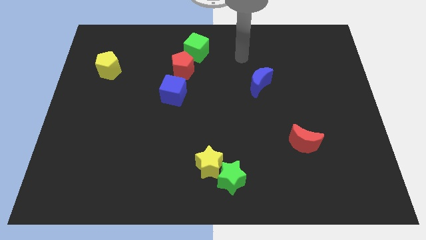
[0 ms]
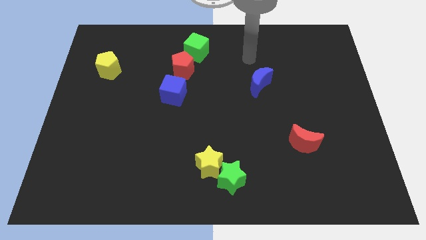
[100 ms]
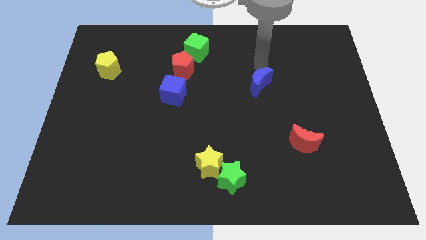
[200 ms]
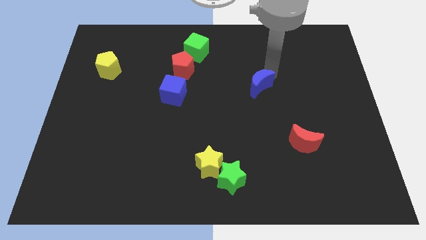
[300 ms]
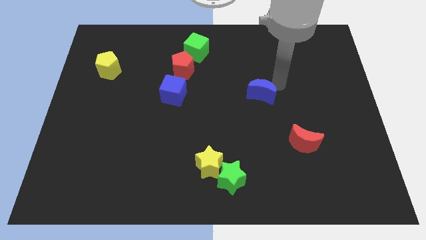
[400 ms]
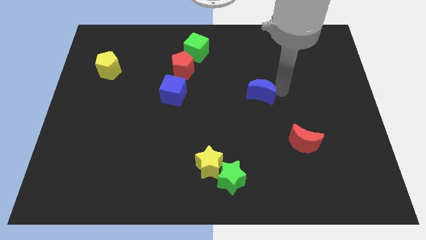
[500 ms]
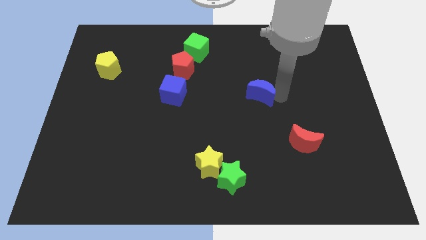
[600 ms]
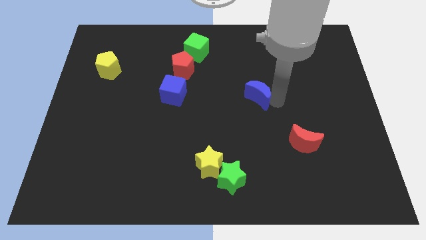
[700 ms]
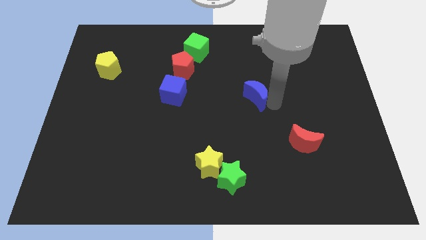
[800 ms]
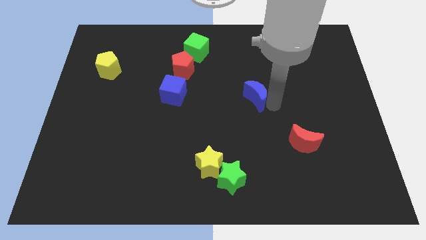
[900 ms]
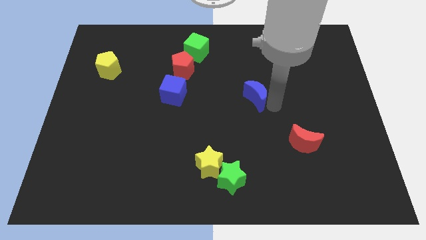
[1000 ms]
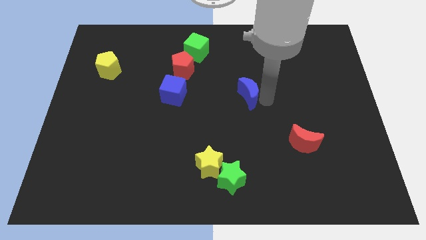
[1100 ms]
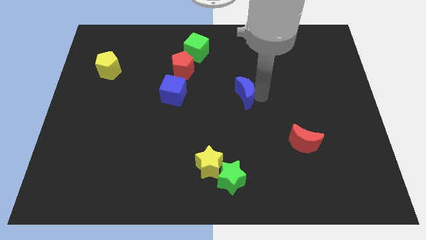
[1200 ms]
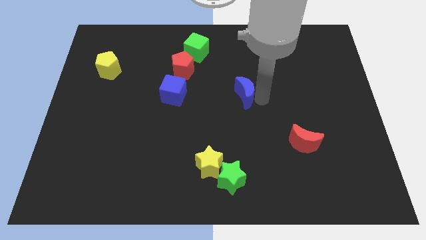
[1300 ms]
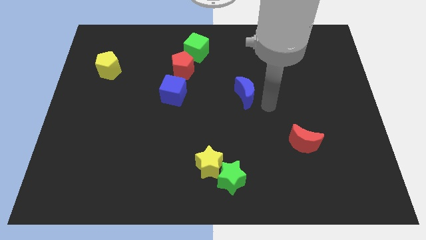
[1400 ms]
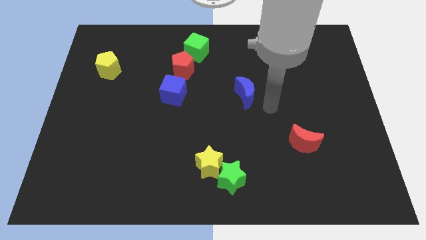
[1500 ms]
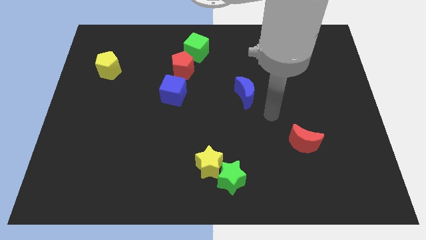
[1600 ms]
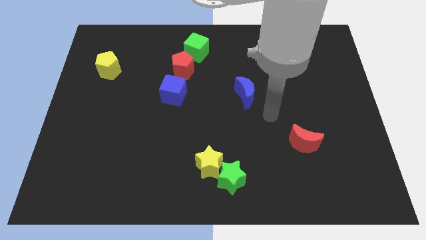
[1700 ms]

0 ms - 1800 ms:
place your arm in between the blue crescent and red crescent

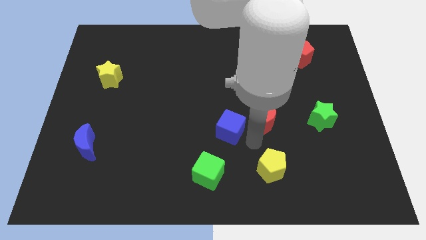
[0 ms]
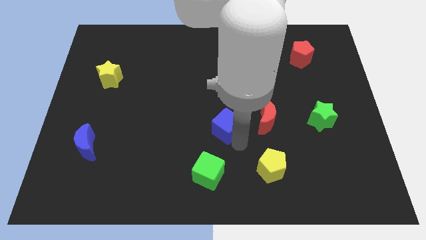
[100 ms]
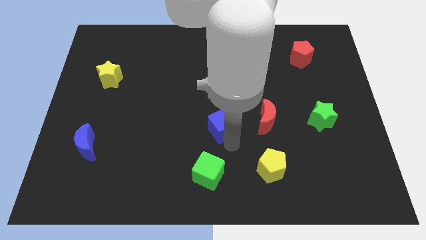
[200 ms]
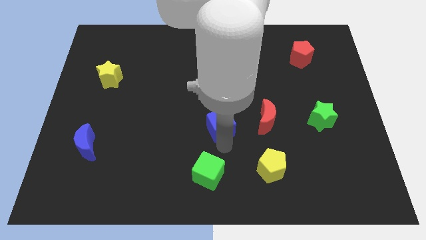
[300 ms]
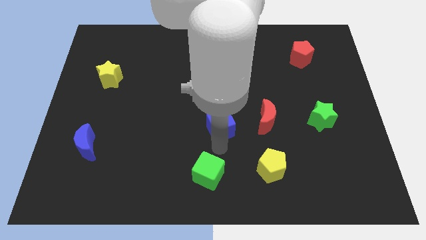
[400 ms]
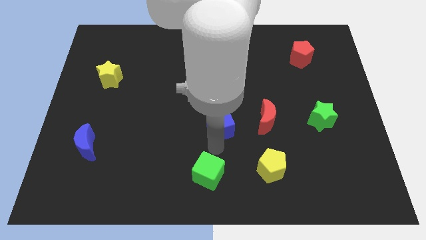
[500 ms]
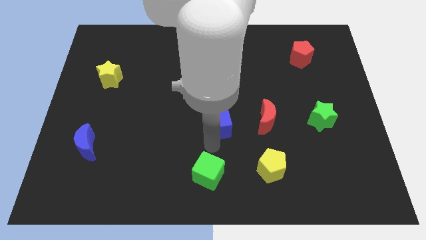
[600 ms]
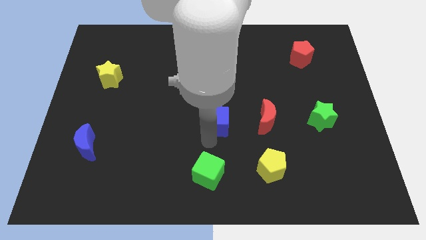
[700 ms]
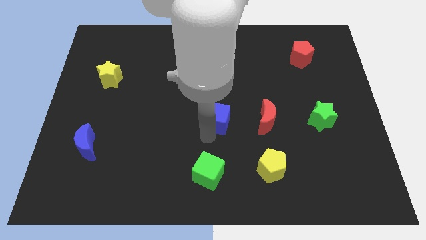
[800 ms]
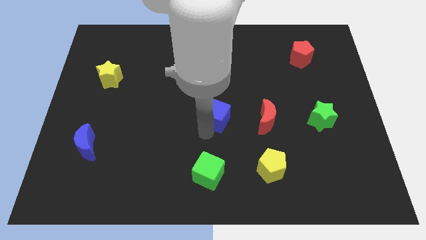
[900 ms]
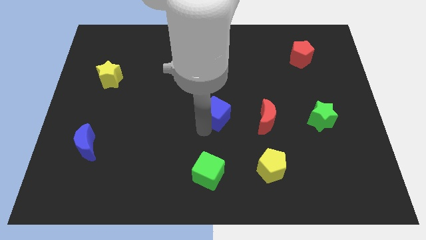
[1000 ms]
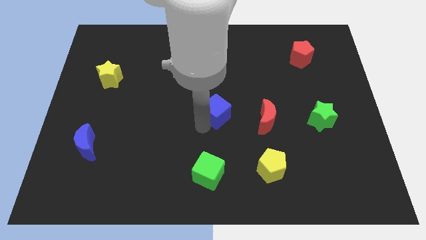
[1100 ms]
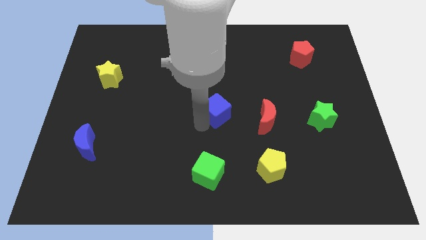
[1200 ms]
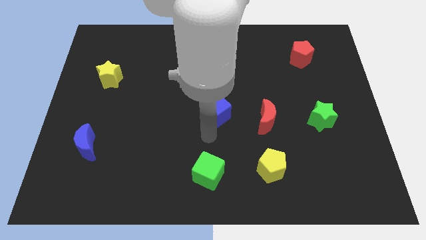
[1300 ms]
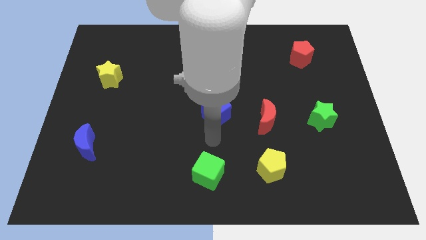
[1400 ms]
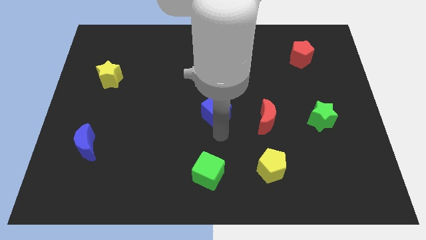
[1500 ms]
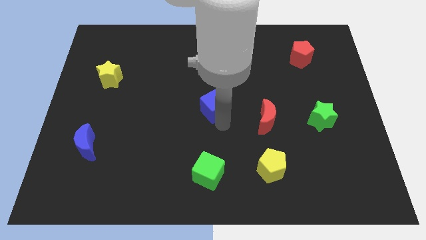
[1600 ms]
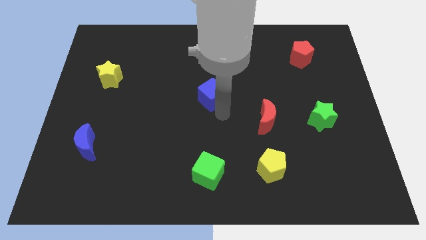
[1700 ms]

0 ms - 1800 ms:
put the blue cube vertically above the green cube

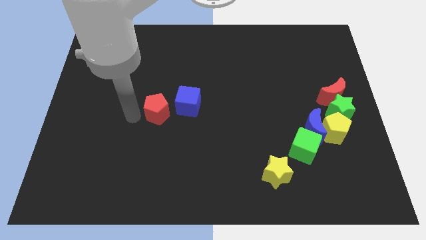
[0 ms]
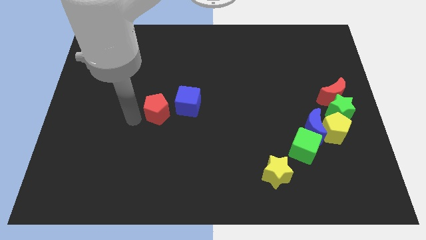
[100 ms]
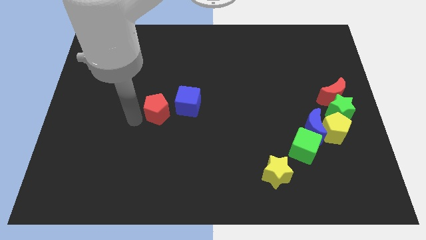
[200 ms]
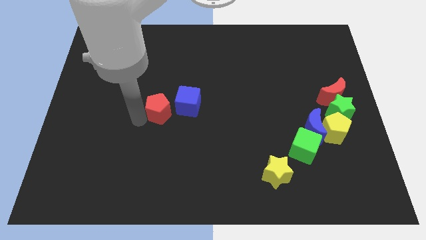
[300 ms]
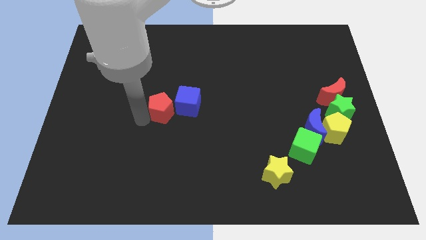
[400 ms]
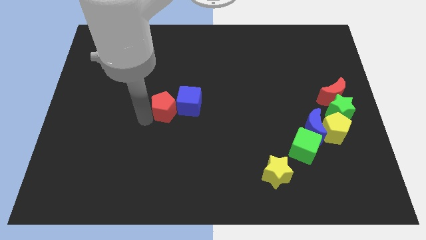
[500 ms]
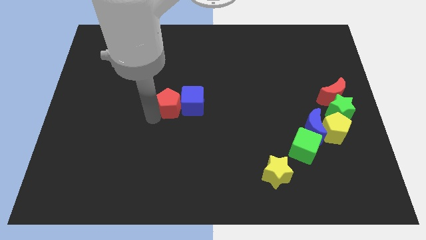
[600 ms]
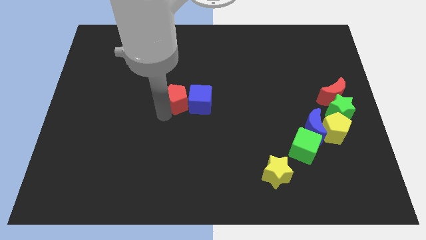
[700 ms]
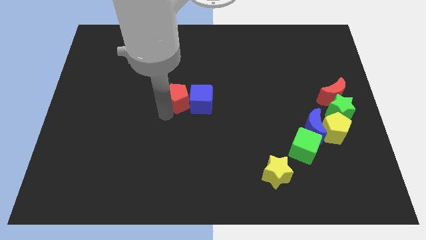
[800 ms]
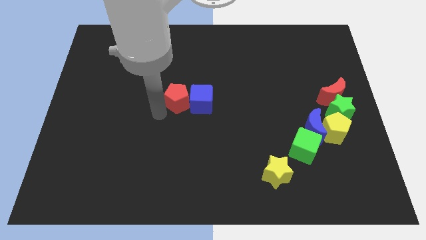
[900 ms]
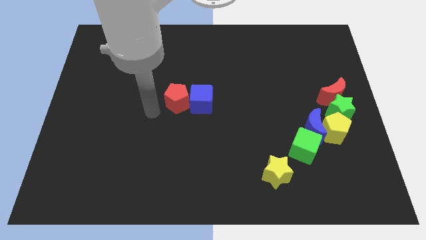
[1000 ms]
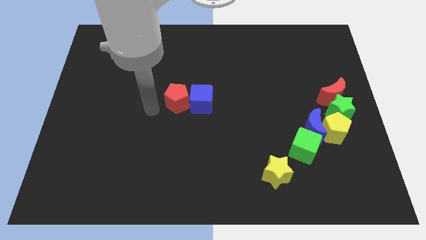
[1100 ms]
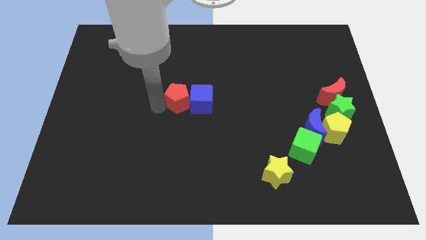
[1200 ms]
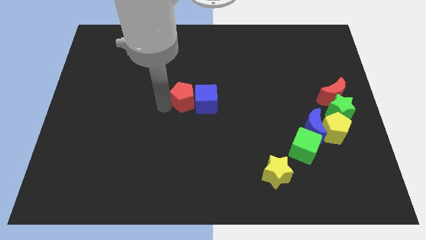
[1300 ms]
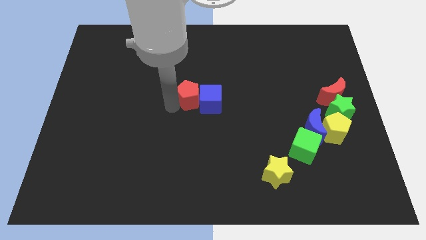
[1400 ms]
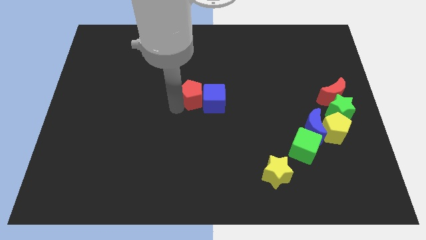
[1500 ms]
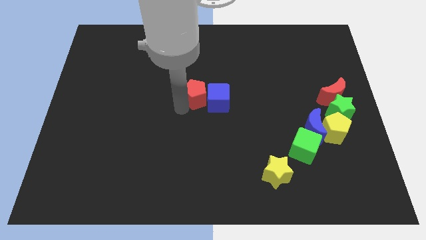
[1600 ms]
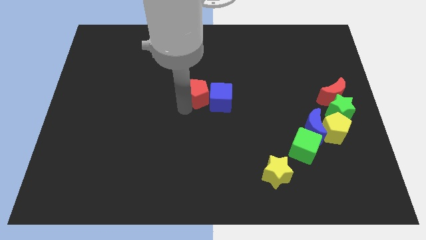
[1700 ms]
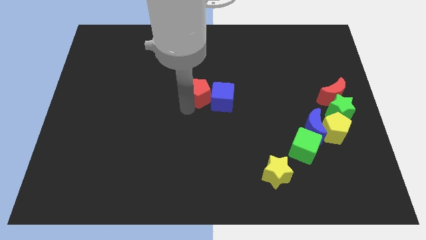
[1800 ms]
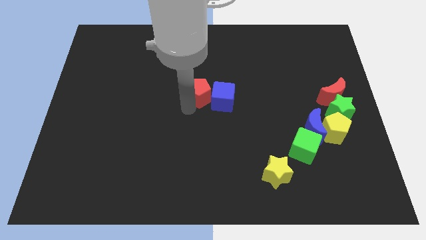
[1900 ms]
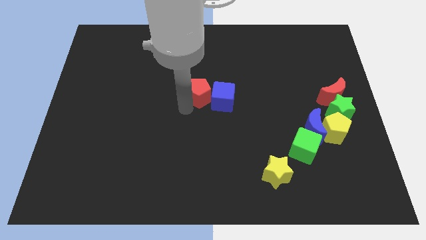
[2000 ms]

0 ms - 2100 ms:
slide red pentagon along with blue cube to the center

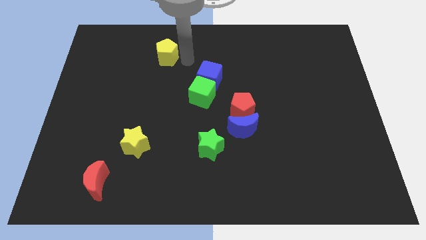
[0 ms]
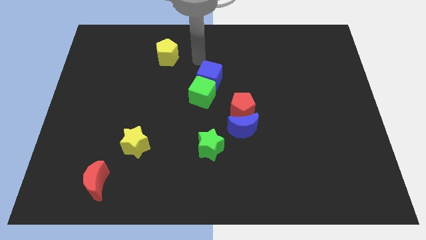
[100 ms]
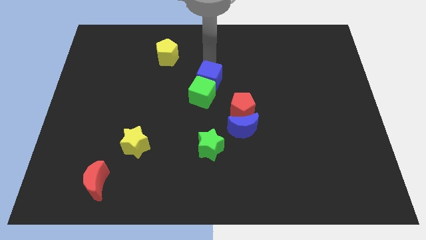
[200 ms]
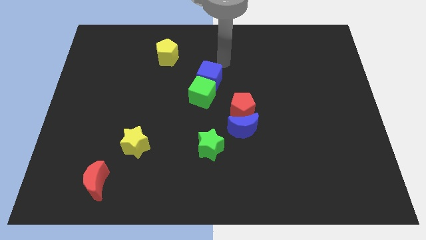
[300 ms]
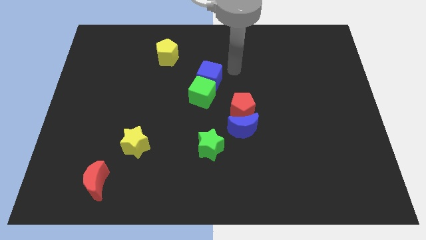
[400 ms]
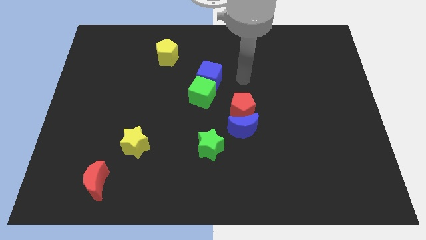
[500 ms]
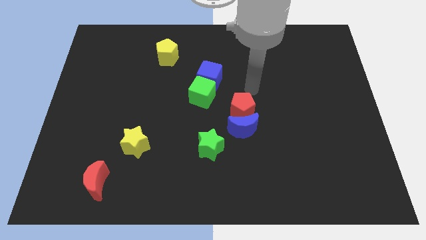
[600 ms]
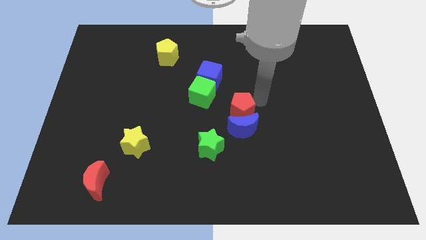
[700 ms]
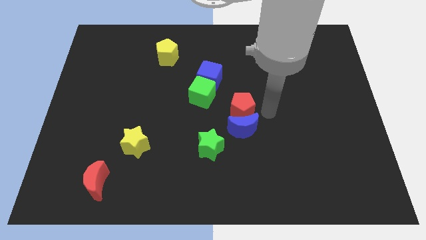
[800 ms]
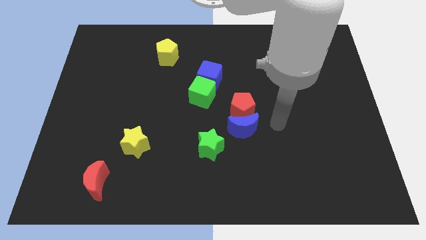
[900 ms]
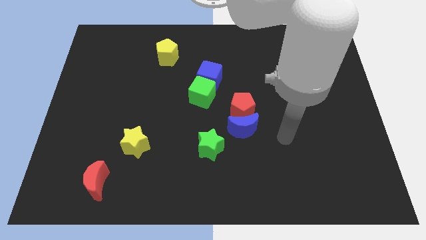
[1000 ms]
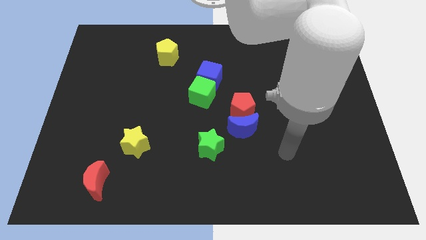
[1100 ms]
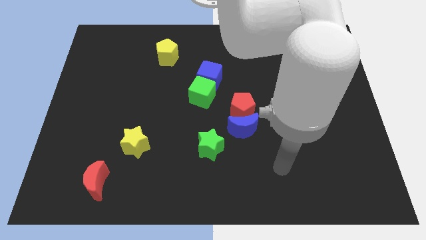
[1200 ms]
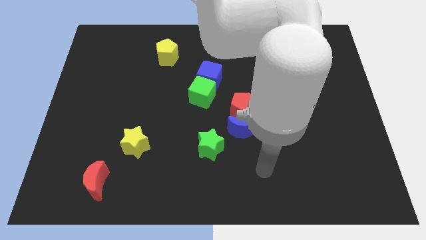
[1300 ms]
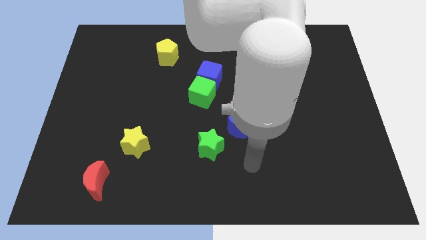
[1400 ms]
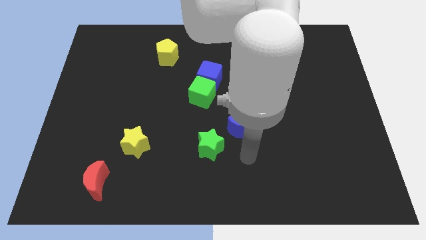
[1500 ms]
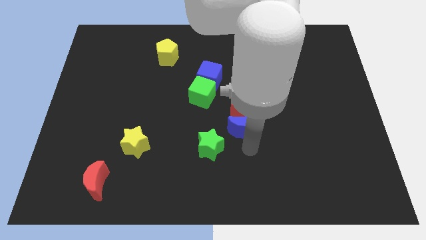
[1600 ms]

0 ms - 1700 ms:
move your arm away from the yellow pentagon

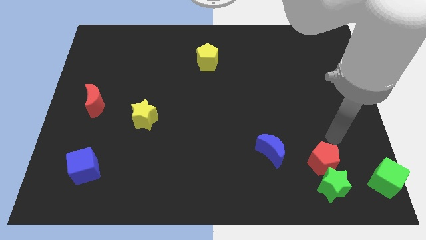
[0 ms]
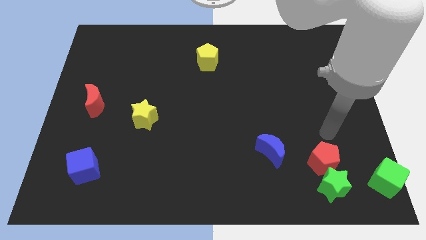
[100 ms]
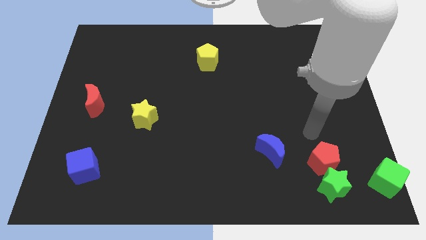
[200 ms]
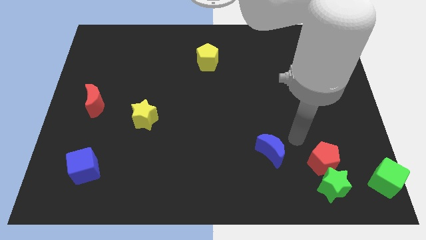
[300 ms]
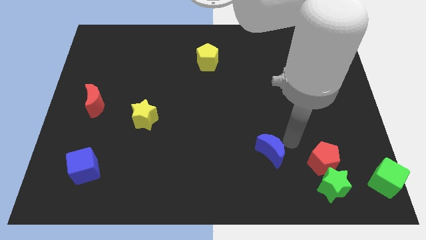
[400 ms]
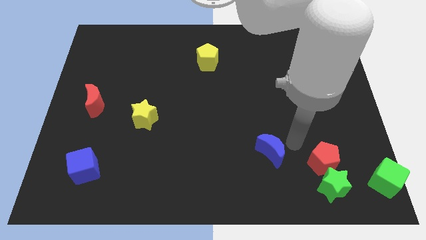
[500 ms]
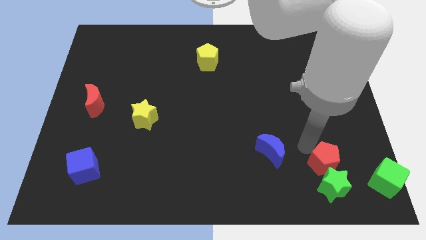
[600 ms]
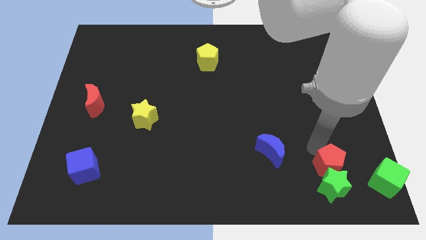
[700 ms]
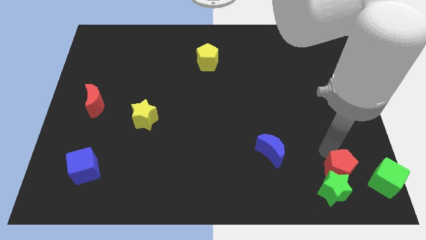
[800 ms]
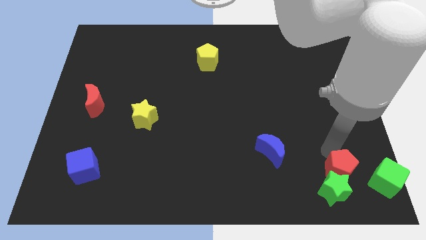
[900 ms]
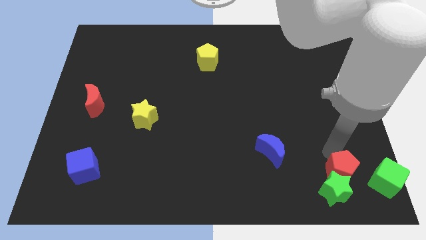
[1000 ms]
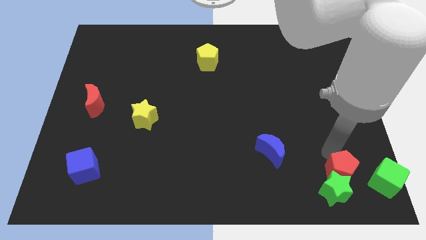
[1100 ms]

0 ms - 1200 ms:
move the red pentagon slightly to the right

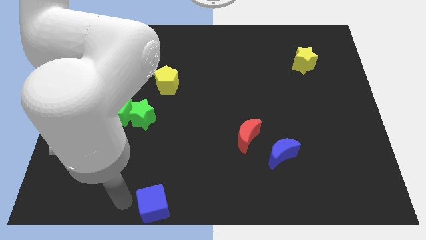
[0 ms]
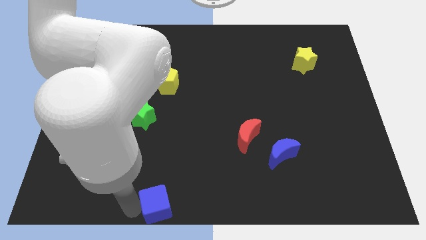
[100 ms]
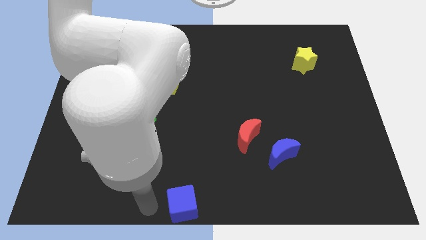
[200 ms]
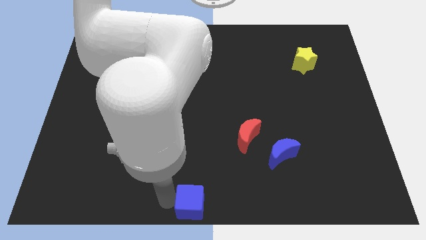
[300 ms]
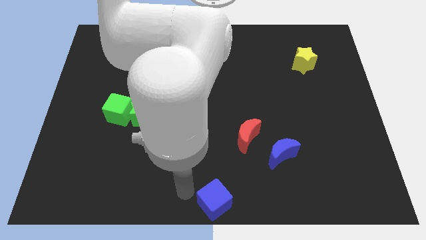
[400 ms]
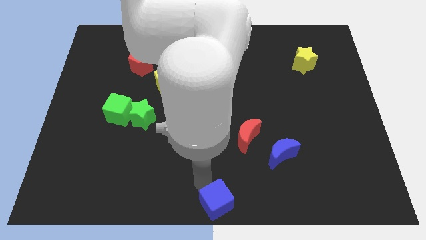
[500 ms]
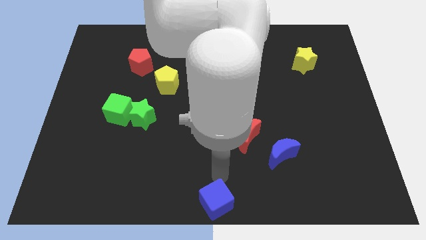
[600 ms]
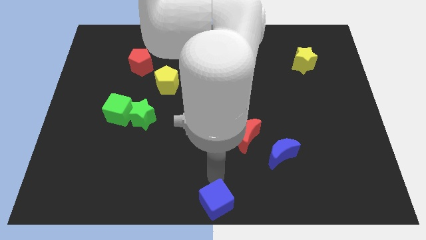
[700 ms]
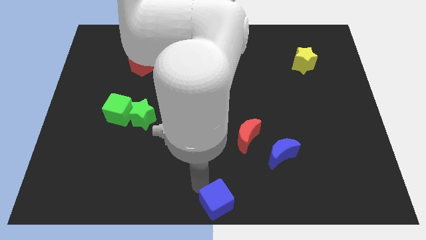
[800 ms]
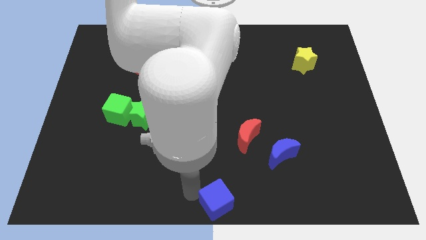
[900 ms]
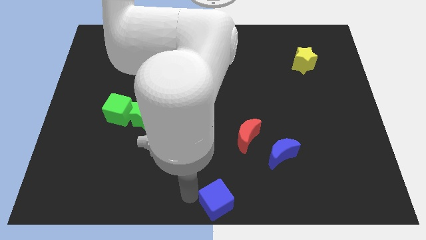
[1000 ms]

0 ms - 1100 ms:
move the blue cube to the center bottom of the board
